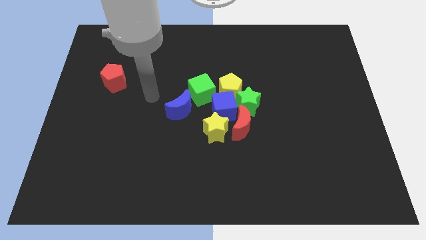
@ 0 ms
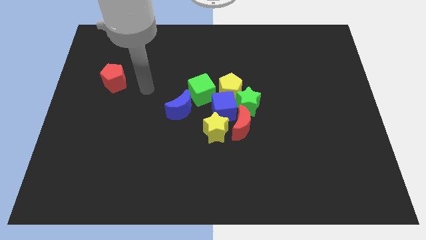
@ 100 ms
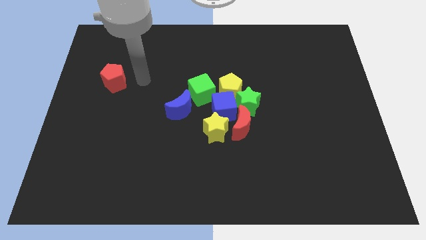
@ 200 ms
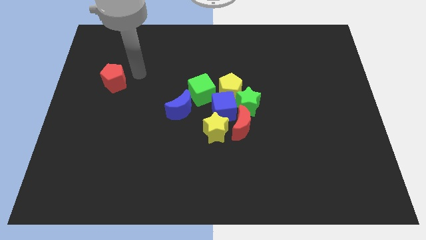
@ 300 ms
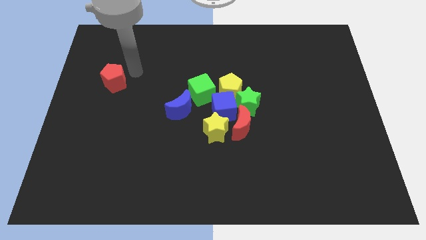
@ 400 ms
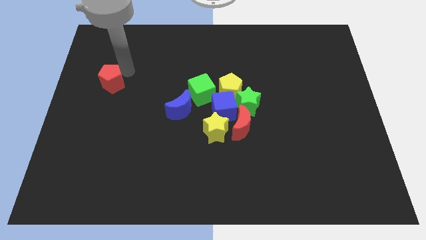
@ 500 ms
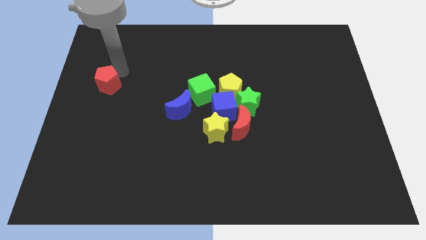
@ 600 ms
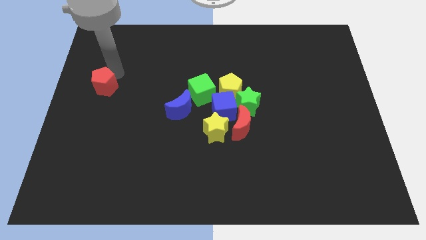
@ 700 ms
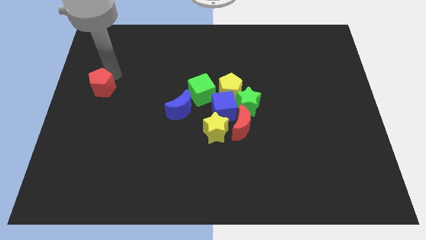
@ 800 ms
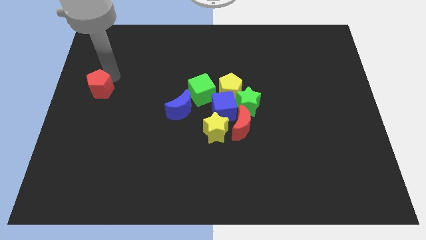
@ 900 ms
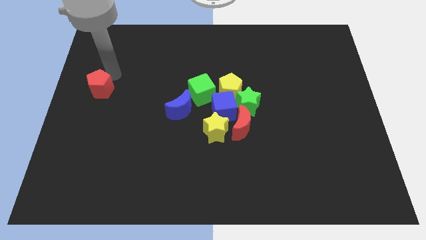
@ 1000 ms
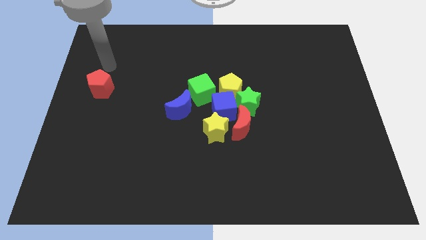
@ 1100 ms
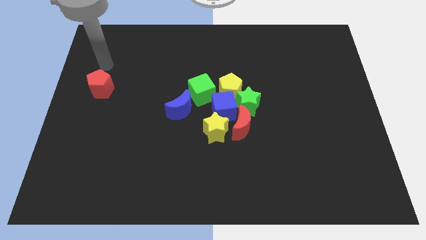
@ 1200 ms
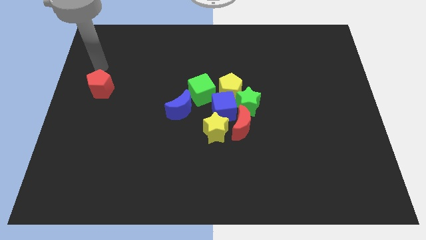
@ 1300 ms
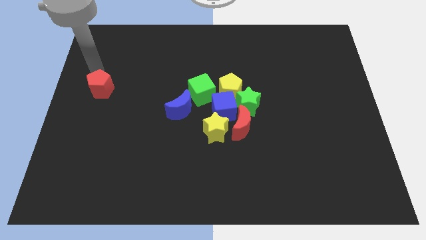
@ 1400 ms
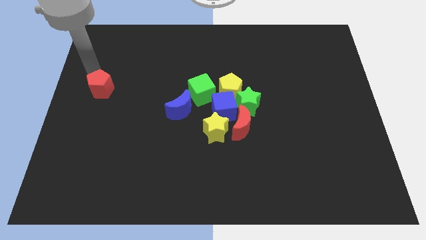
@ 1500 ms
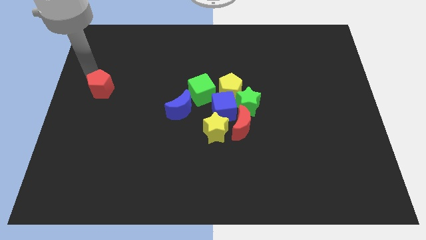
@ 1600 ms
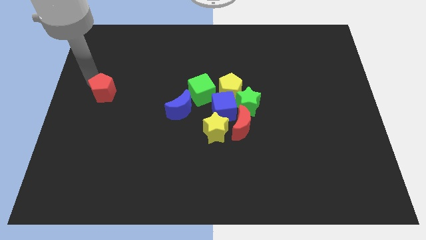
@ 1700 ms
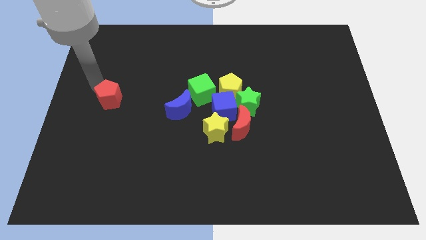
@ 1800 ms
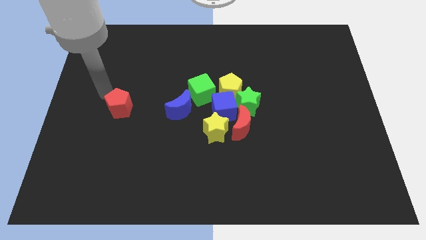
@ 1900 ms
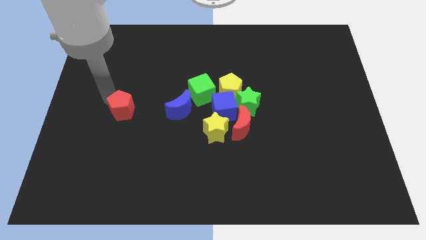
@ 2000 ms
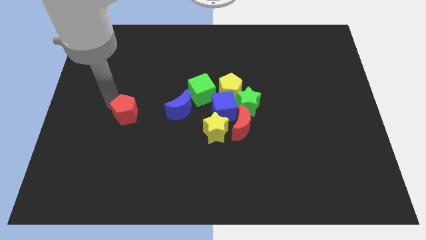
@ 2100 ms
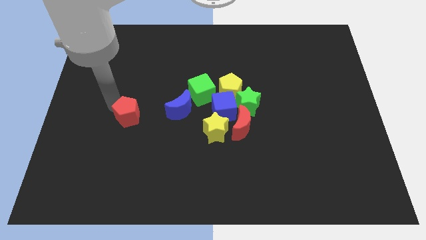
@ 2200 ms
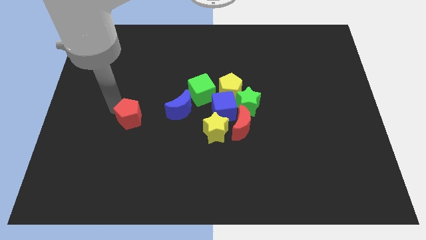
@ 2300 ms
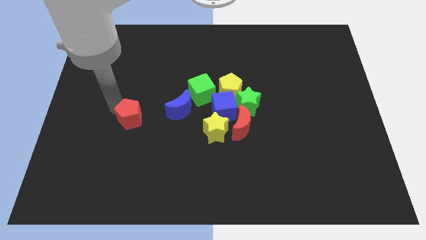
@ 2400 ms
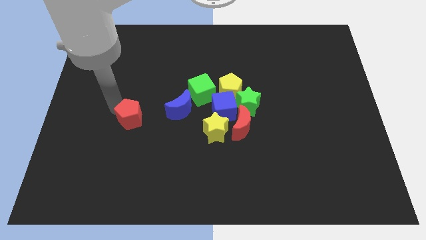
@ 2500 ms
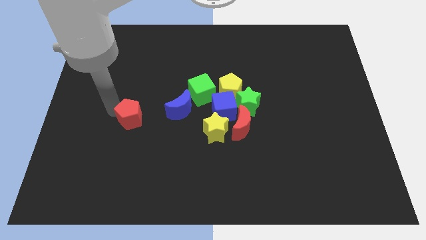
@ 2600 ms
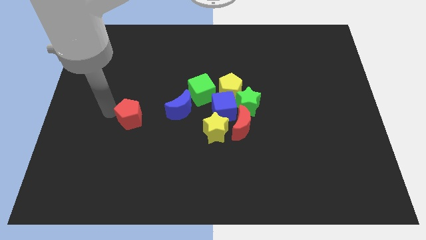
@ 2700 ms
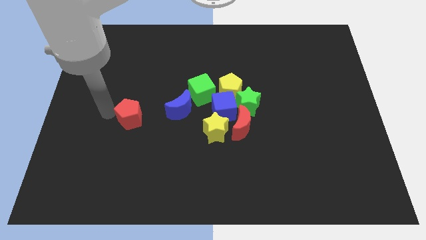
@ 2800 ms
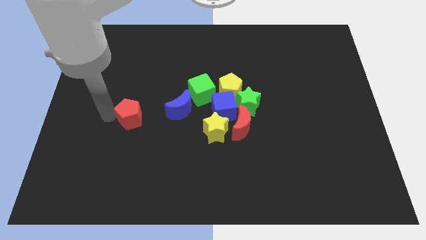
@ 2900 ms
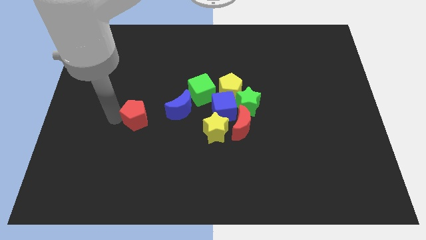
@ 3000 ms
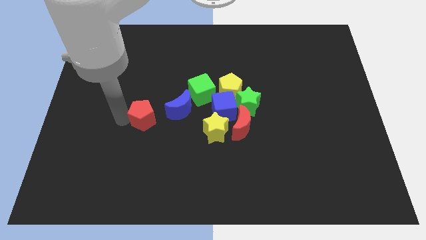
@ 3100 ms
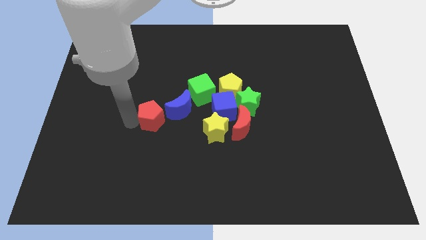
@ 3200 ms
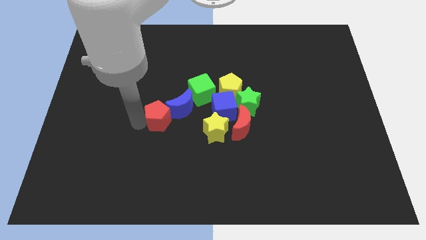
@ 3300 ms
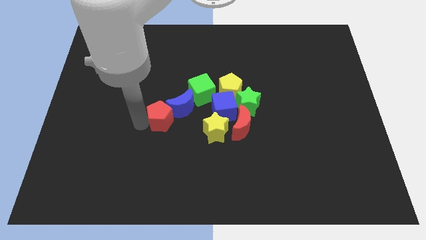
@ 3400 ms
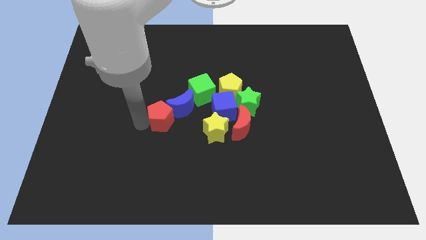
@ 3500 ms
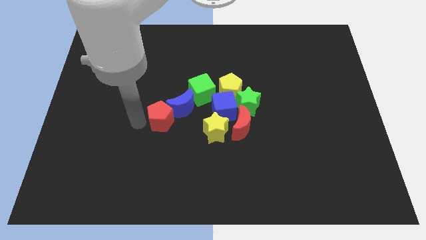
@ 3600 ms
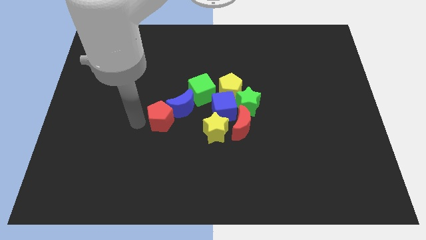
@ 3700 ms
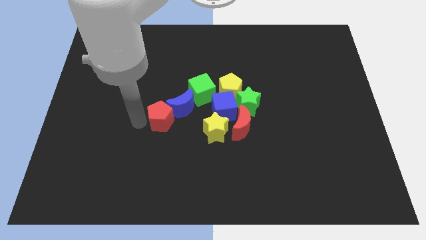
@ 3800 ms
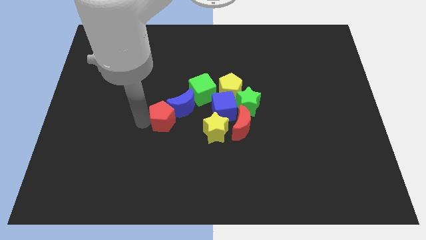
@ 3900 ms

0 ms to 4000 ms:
place red pentagon to the bottom of blue moon

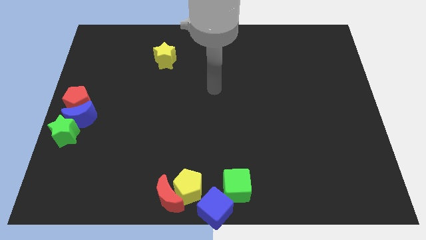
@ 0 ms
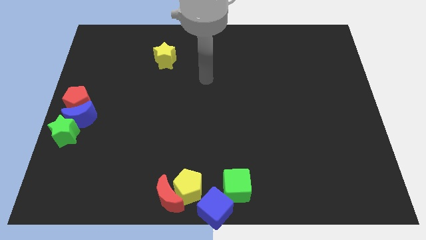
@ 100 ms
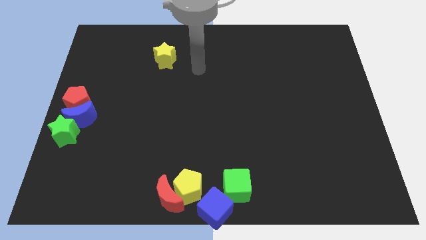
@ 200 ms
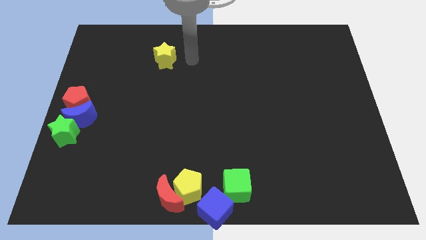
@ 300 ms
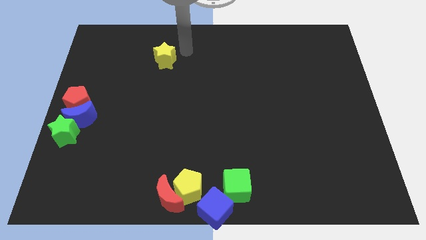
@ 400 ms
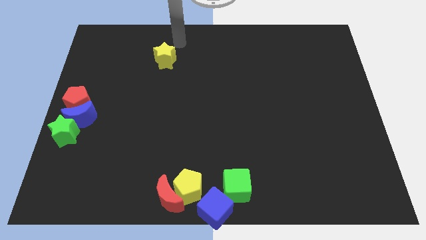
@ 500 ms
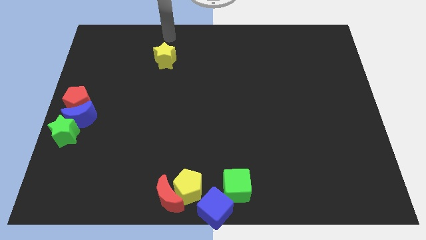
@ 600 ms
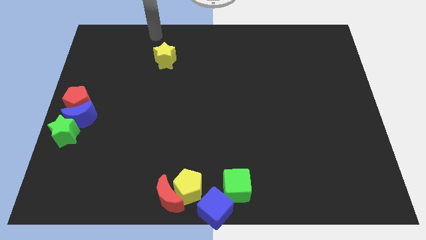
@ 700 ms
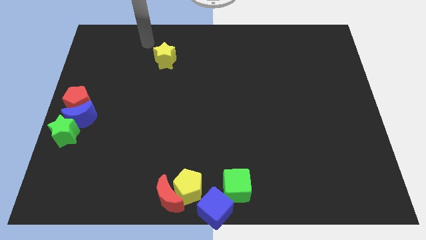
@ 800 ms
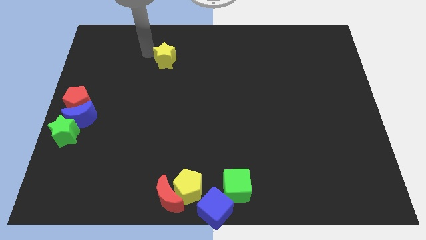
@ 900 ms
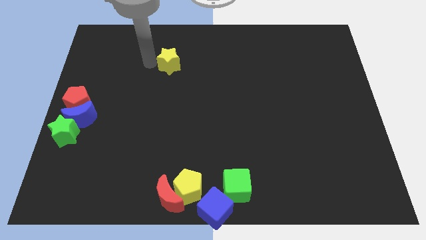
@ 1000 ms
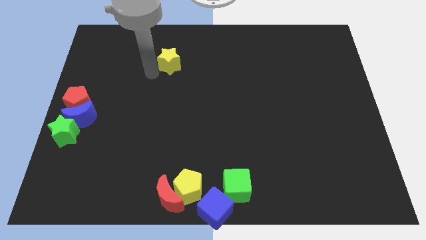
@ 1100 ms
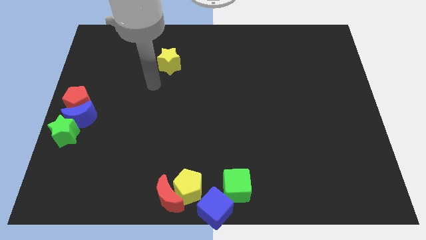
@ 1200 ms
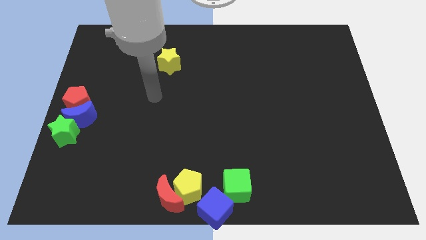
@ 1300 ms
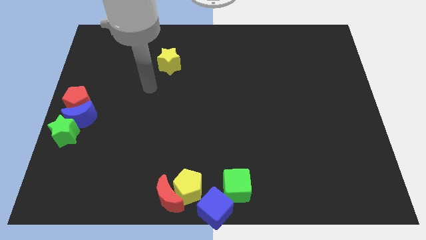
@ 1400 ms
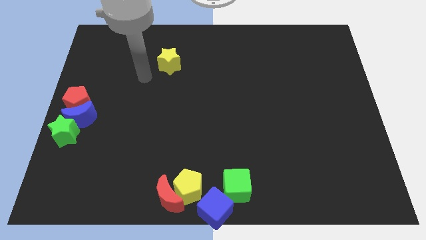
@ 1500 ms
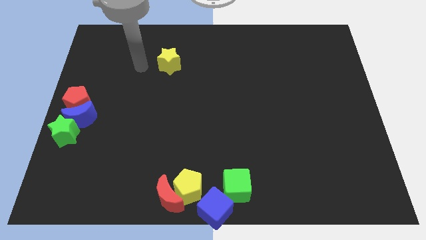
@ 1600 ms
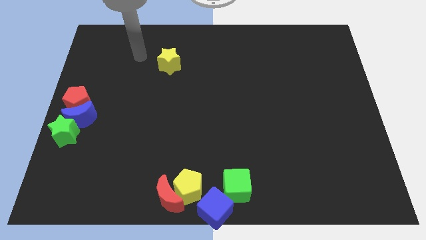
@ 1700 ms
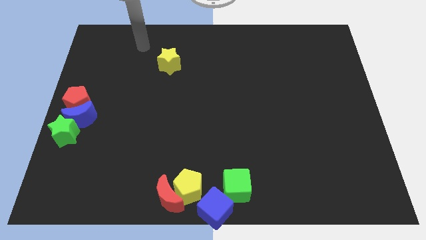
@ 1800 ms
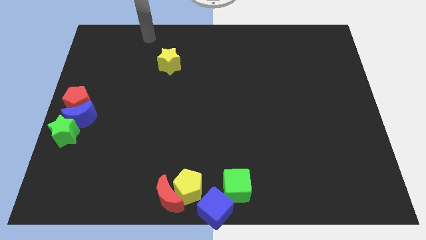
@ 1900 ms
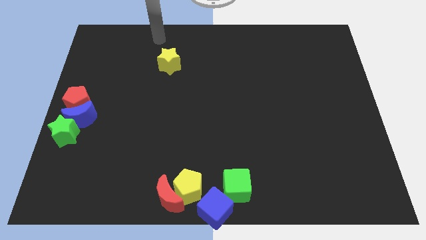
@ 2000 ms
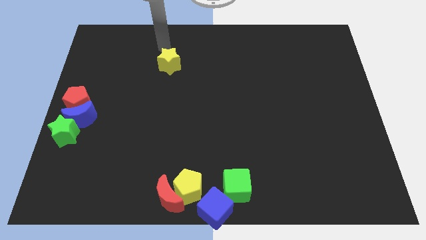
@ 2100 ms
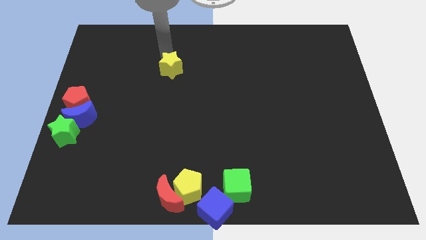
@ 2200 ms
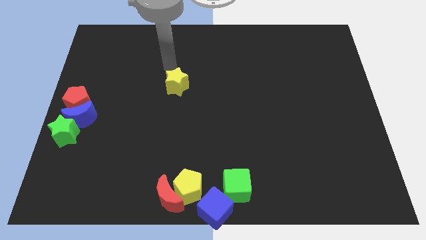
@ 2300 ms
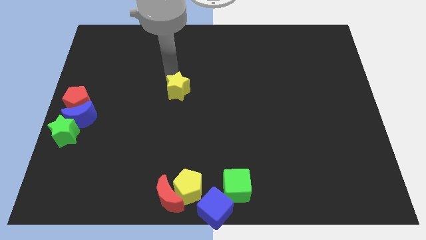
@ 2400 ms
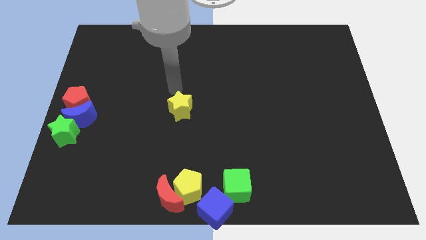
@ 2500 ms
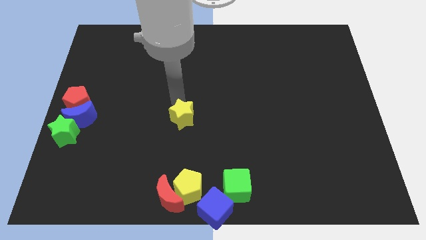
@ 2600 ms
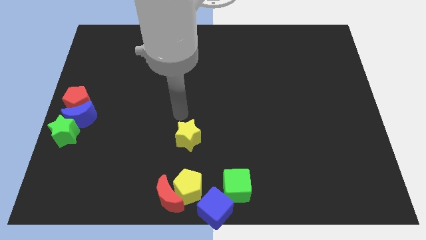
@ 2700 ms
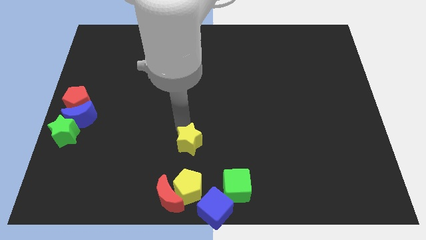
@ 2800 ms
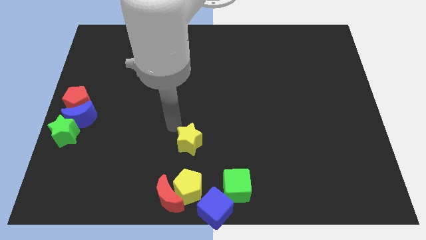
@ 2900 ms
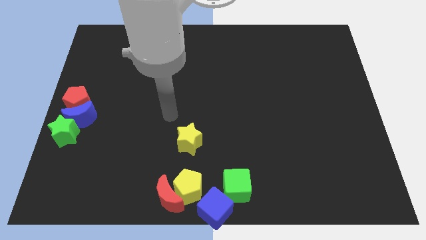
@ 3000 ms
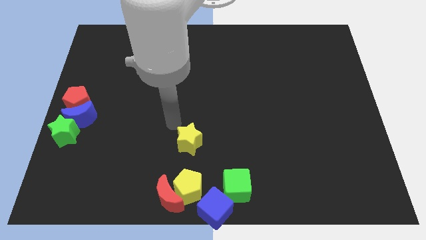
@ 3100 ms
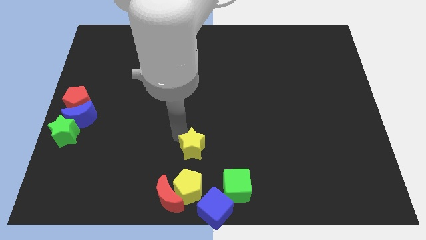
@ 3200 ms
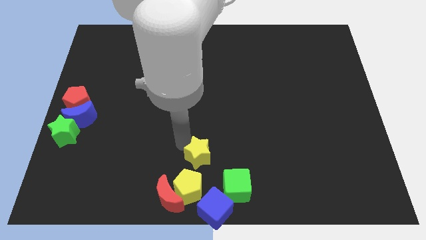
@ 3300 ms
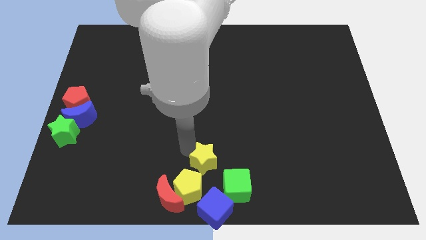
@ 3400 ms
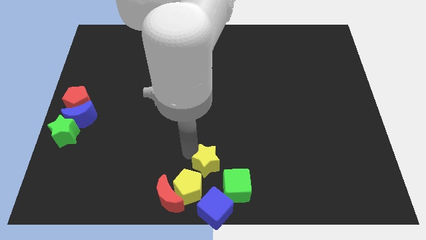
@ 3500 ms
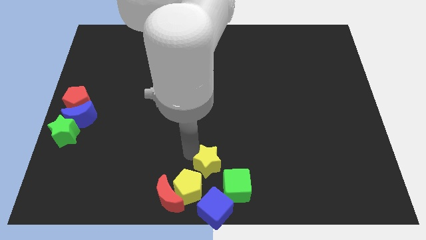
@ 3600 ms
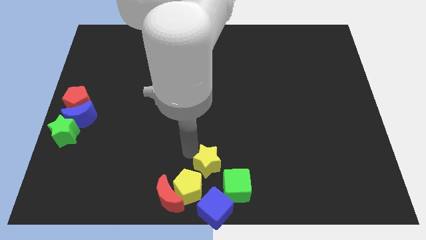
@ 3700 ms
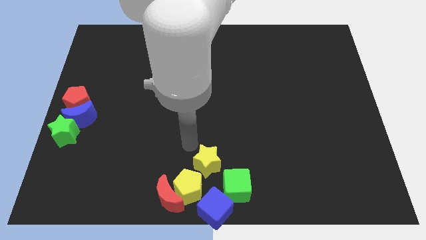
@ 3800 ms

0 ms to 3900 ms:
place yellow star towards the bottom

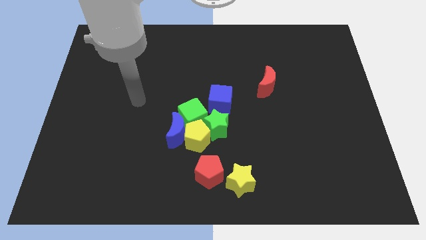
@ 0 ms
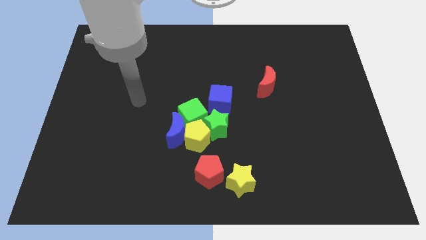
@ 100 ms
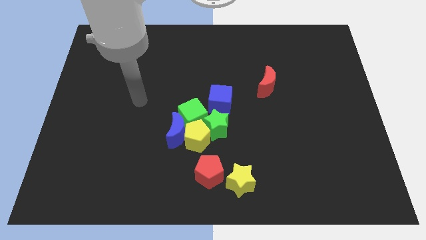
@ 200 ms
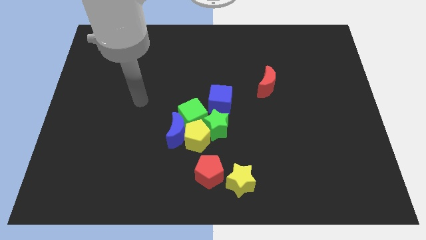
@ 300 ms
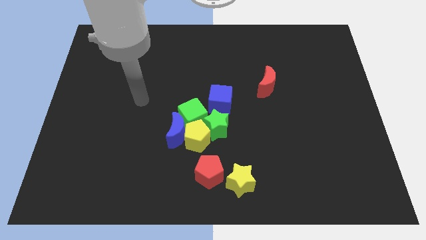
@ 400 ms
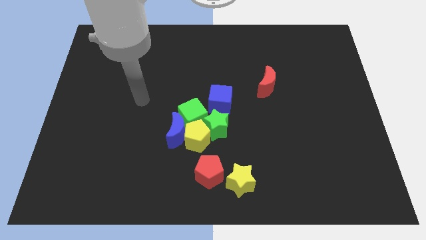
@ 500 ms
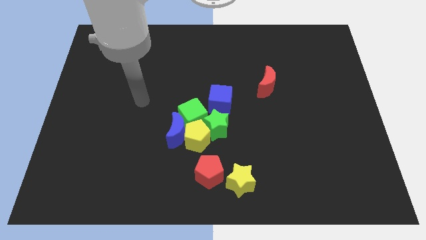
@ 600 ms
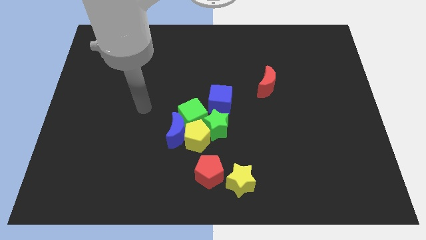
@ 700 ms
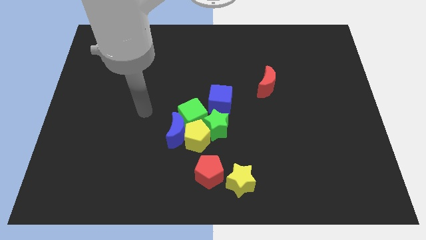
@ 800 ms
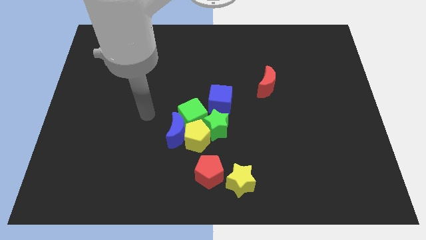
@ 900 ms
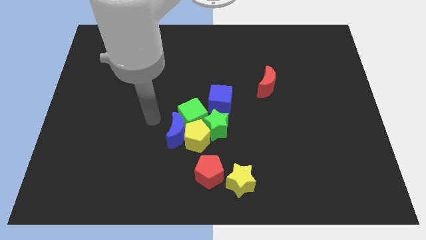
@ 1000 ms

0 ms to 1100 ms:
move arm towards blue moon
